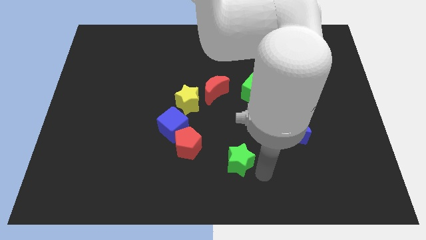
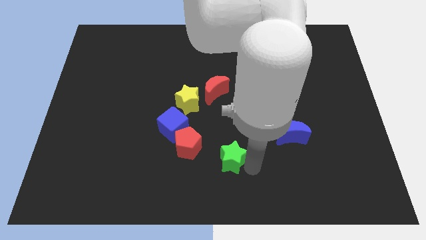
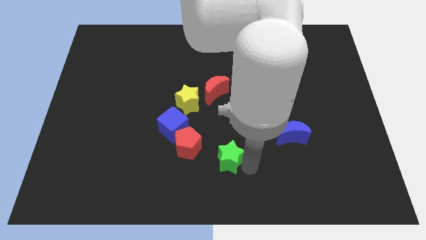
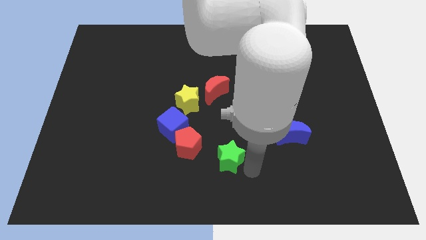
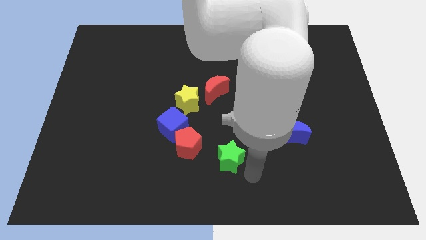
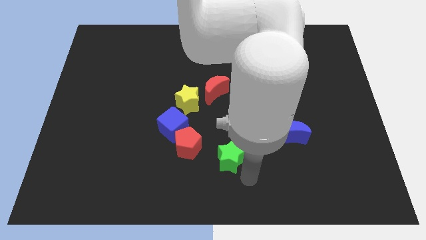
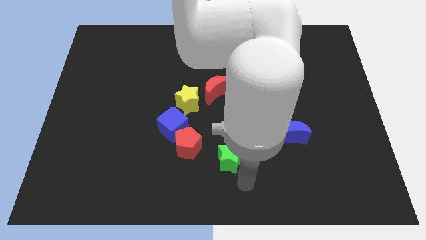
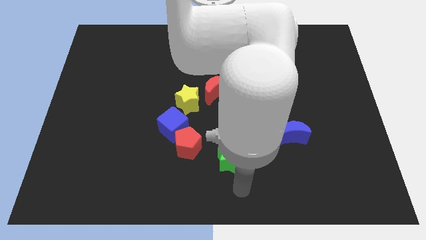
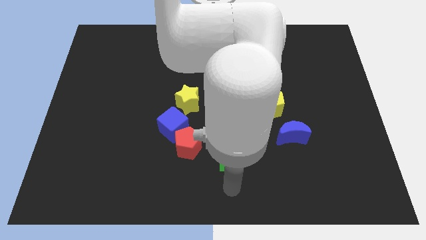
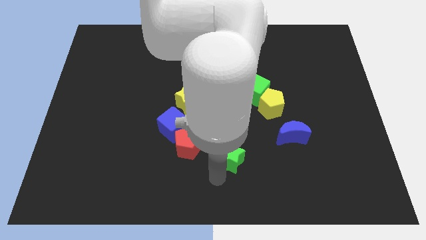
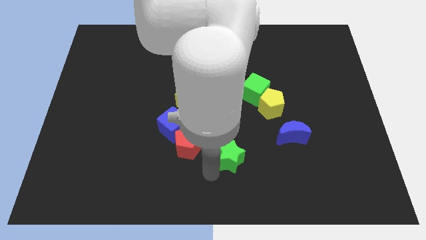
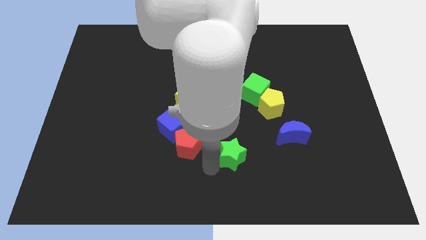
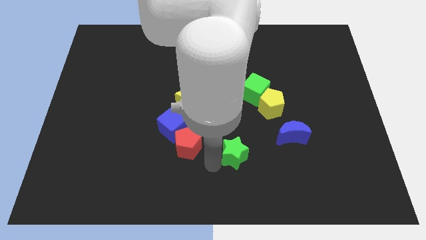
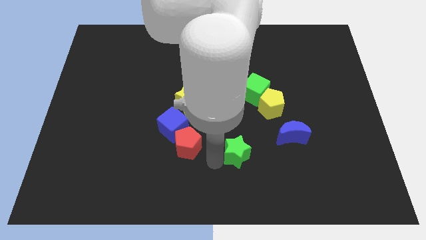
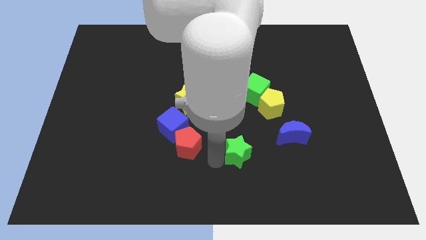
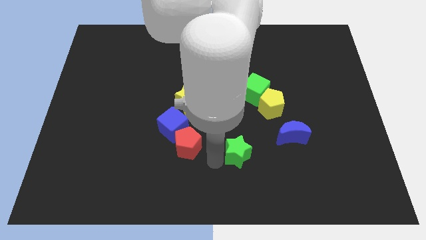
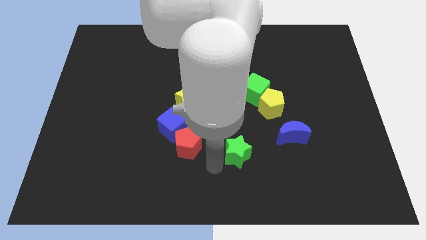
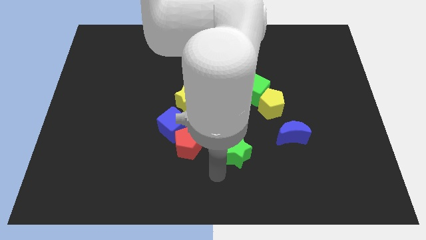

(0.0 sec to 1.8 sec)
push the green star to the right of the red pentagon

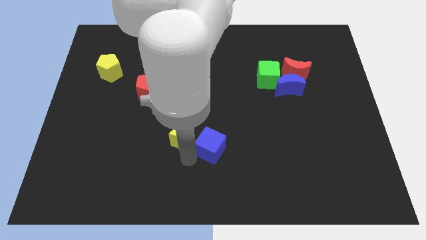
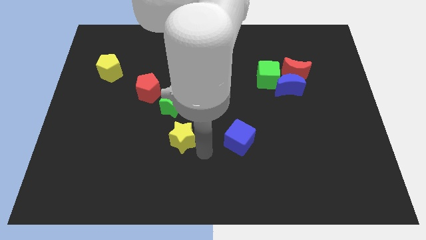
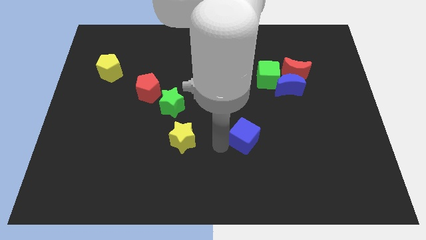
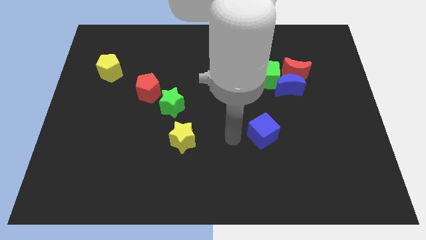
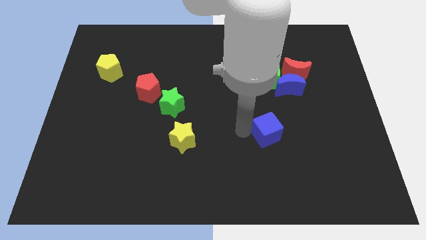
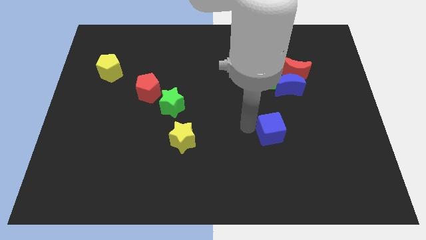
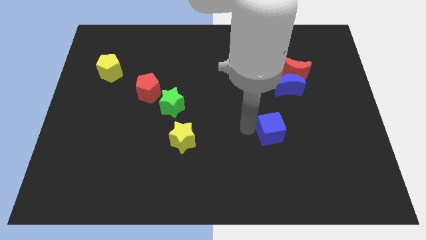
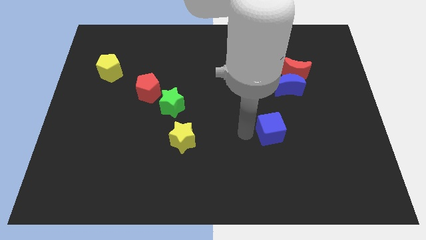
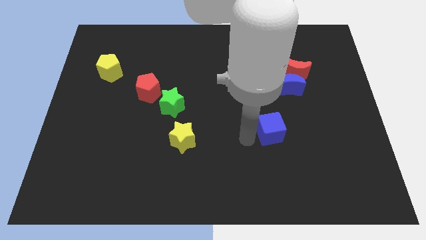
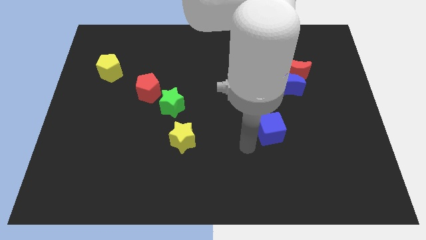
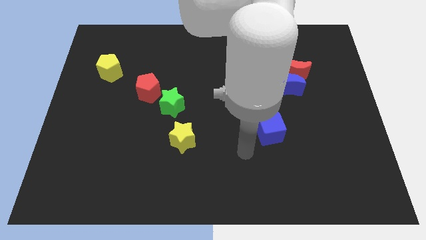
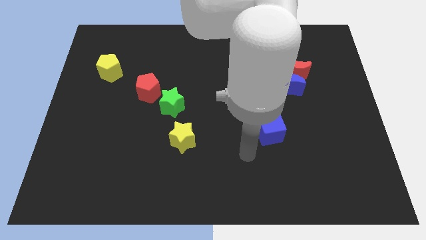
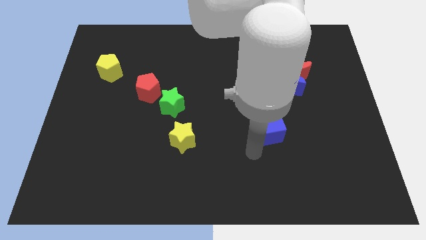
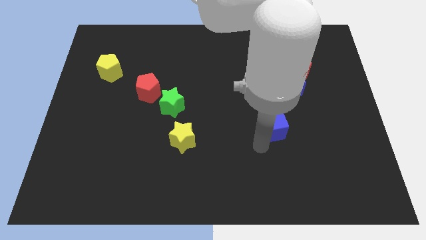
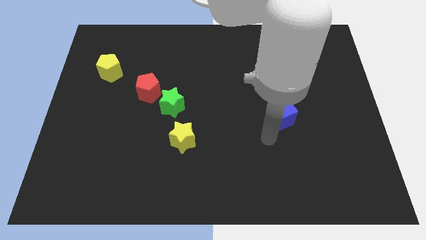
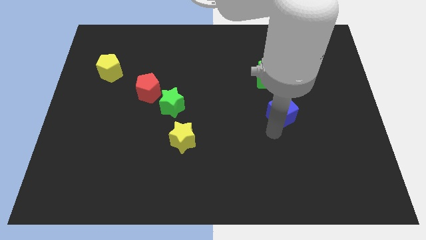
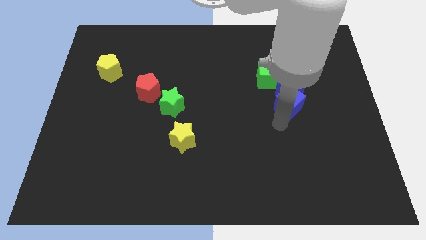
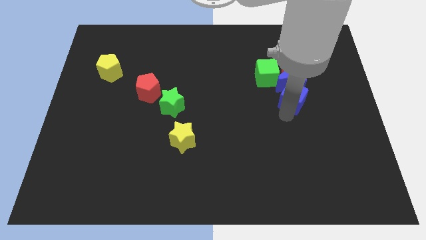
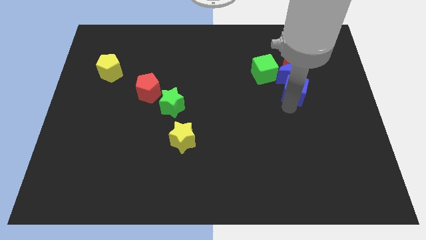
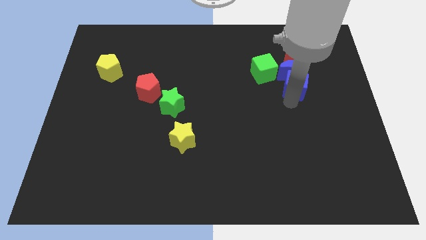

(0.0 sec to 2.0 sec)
push the blue cube into the blue moon

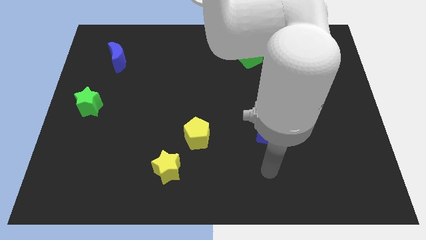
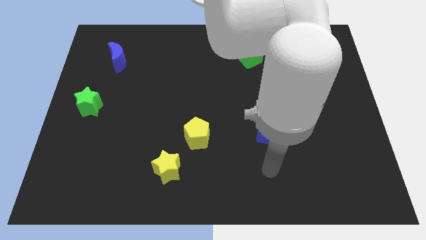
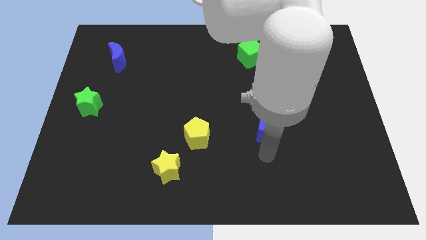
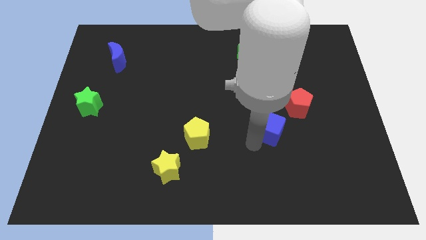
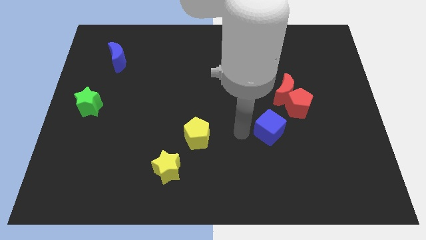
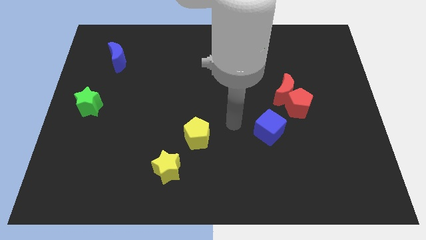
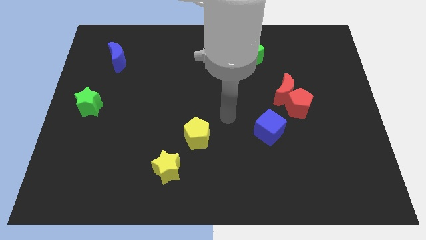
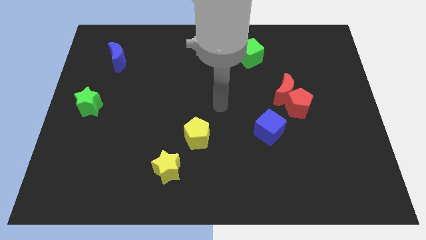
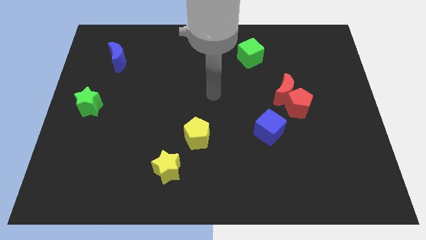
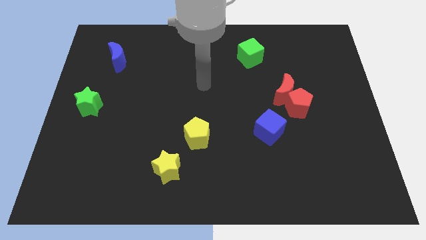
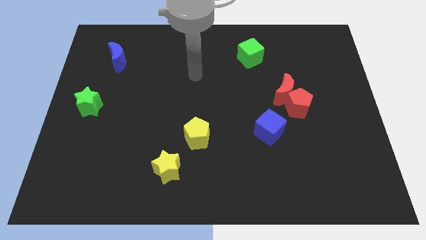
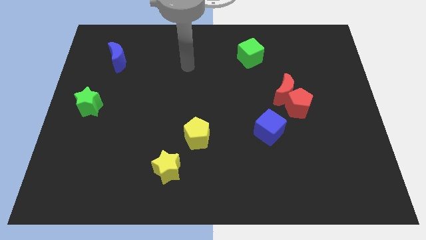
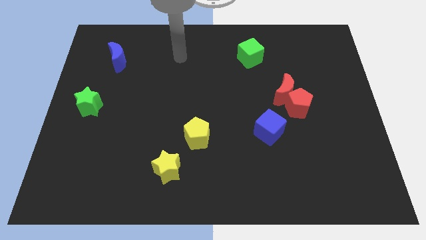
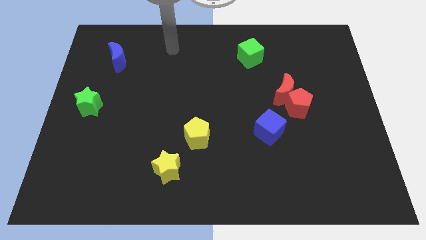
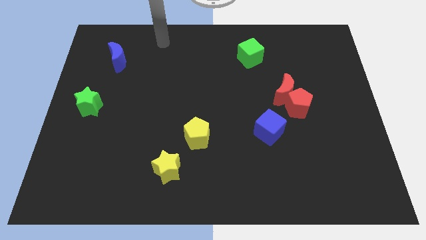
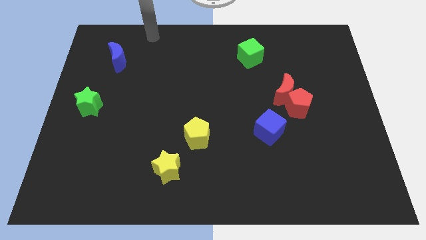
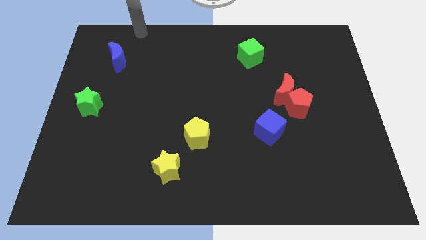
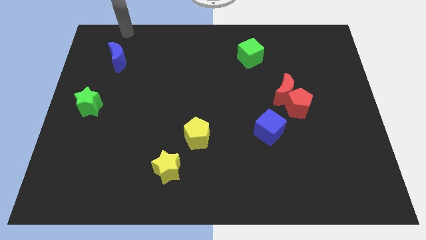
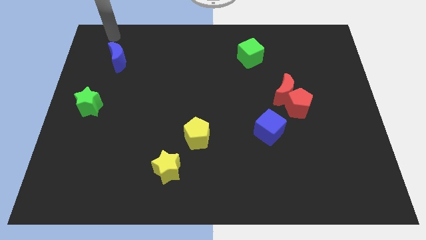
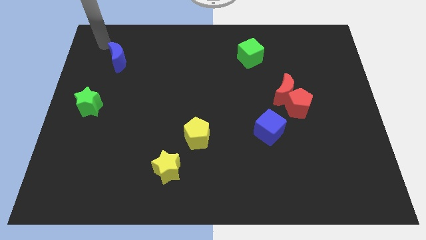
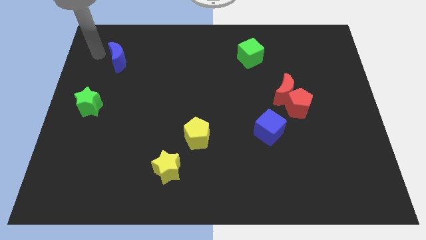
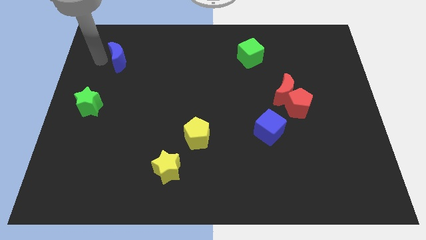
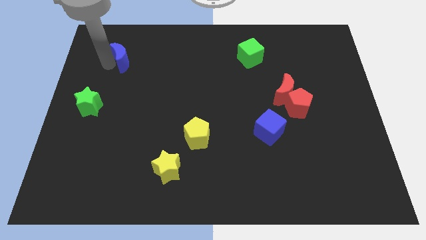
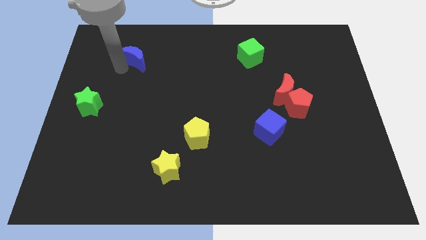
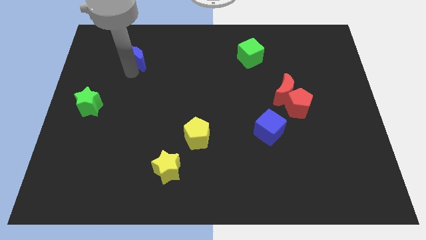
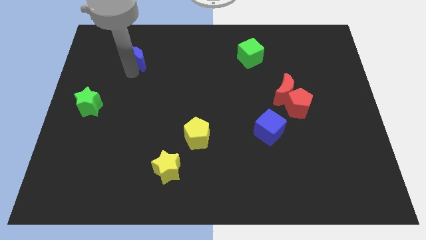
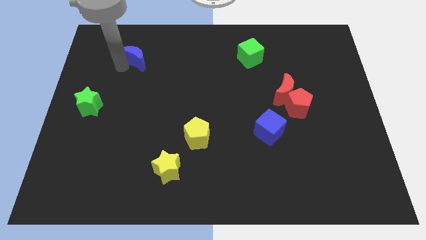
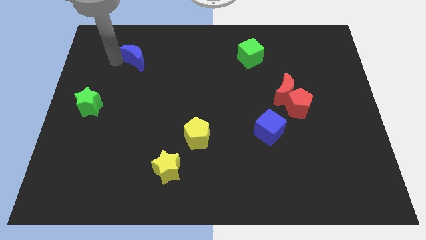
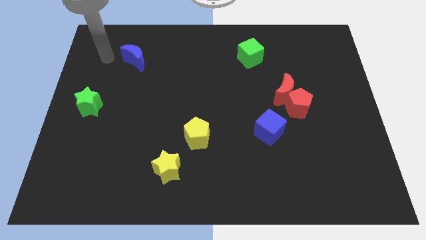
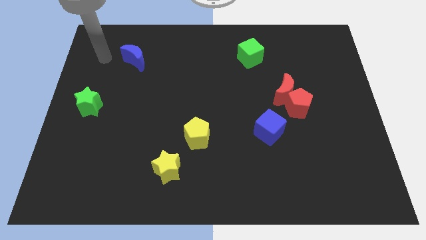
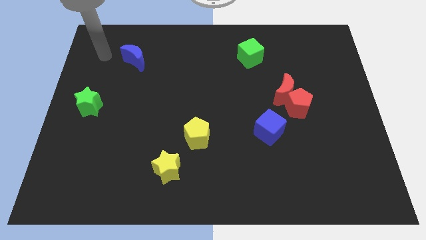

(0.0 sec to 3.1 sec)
move blue cube and blue crescent slightly

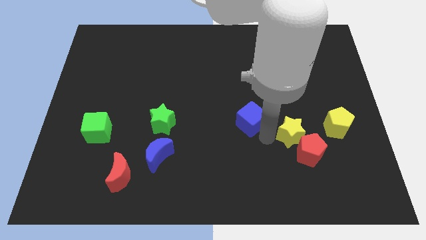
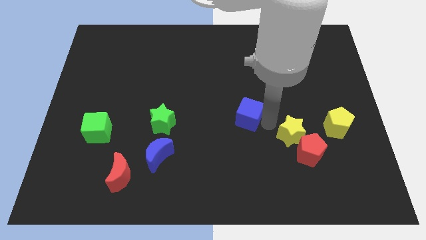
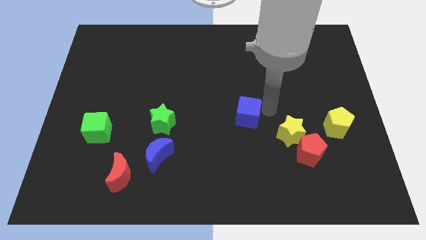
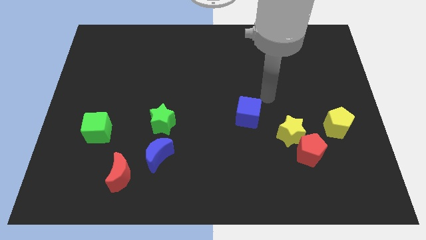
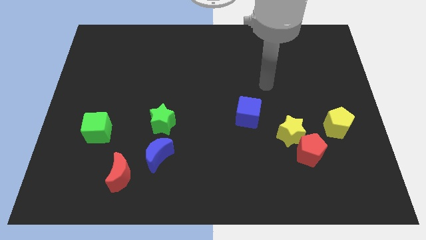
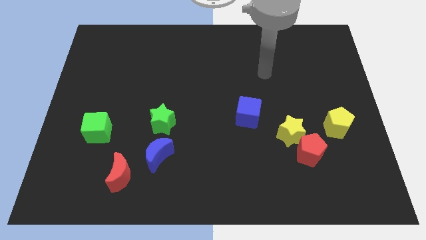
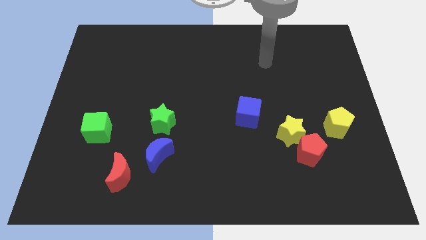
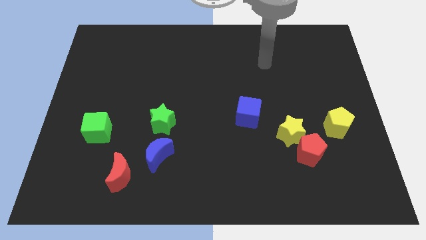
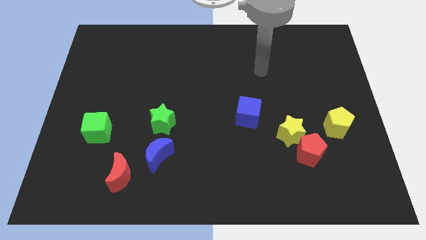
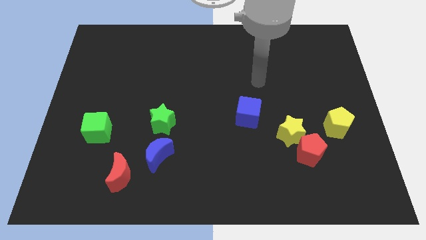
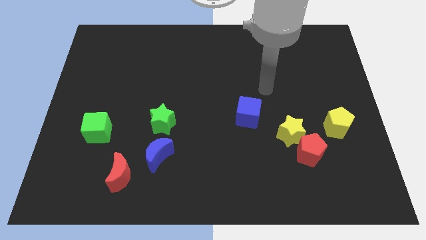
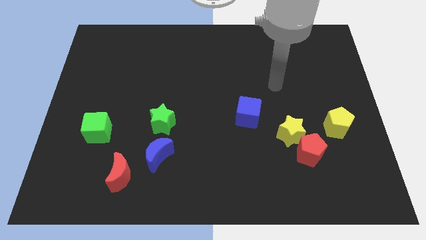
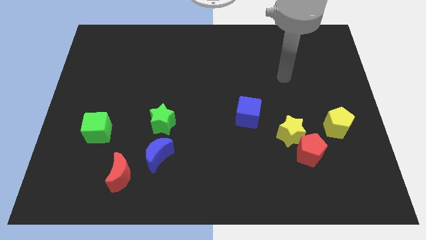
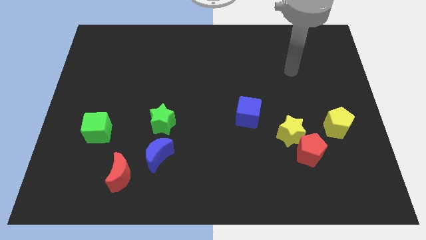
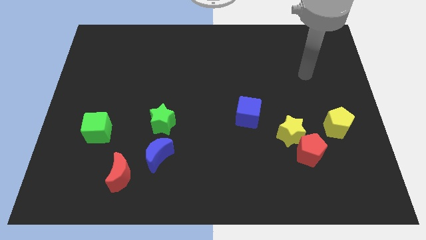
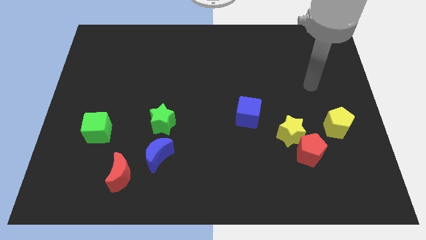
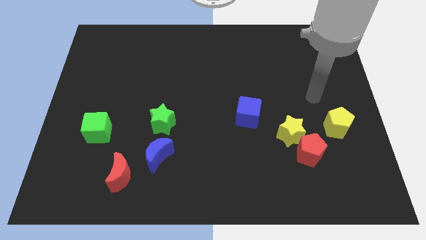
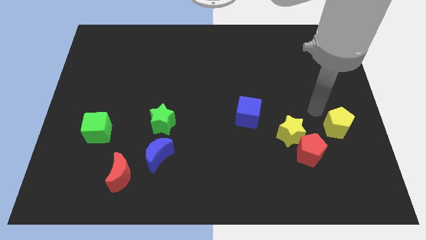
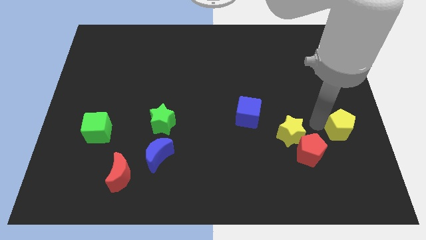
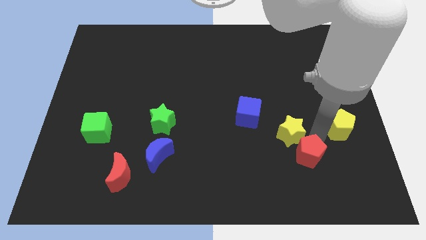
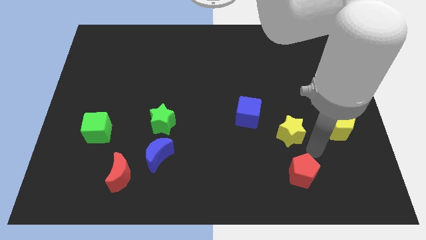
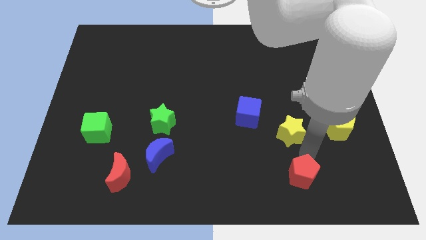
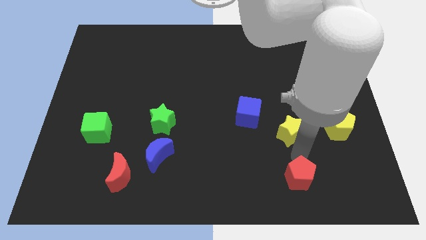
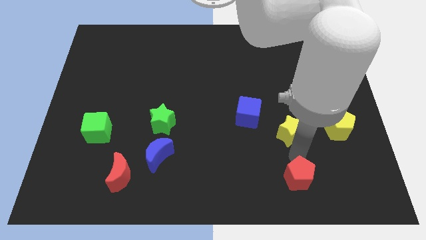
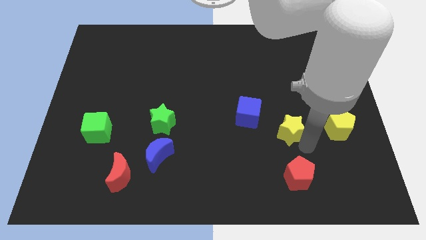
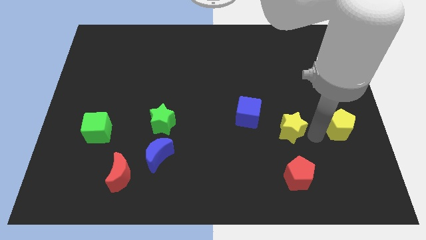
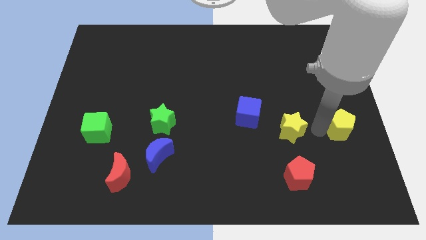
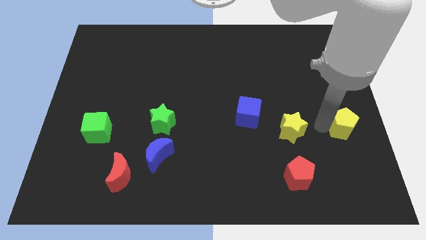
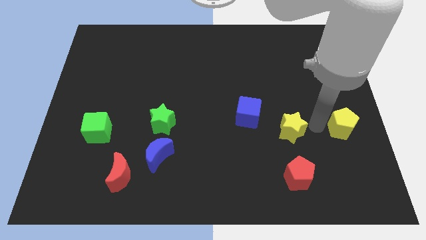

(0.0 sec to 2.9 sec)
place the red pentagon below the yellow star
